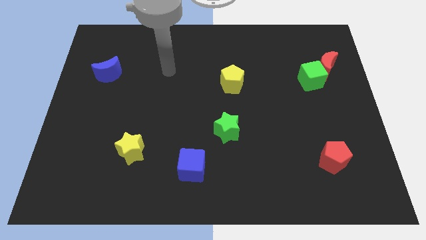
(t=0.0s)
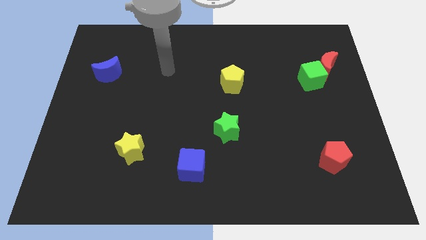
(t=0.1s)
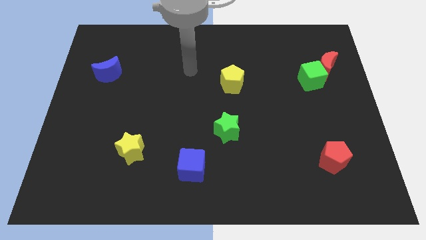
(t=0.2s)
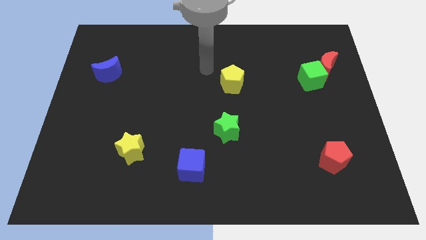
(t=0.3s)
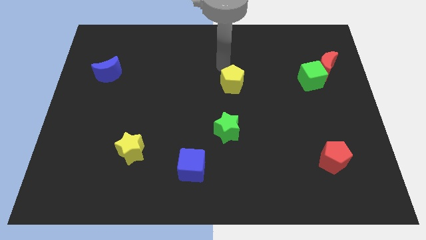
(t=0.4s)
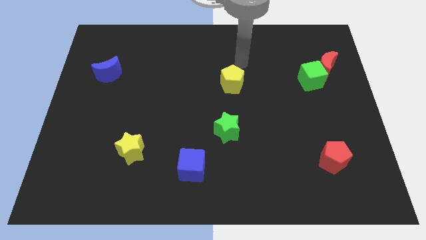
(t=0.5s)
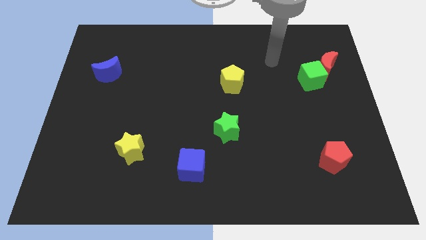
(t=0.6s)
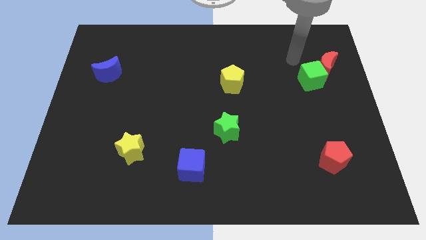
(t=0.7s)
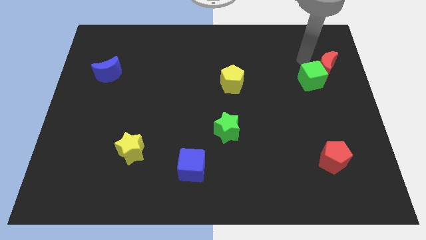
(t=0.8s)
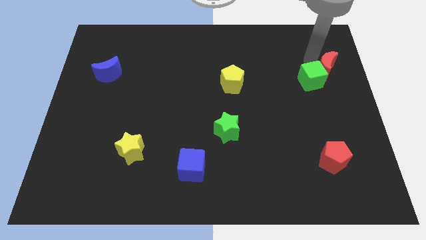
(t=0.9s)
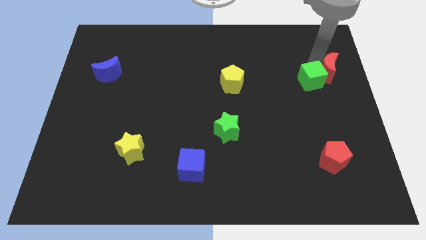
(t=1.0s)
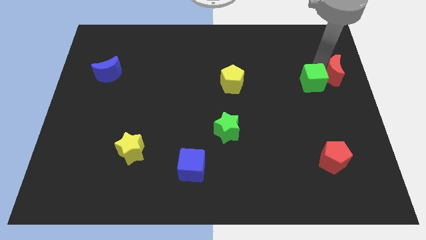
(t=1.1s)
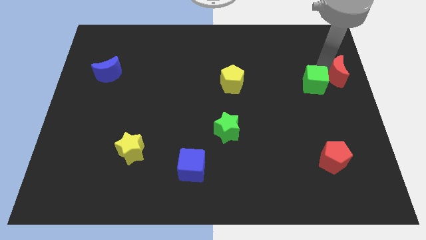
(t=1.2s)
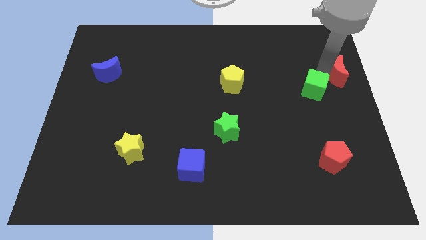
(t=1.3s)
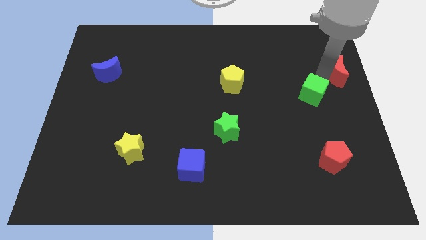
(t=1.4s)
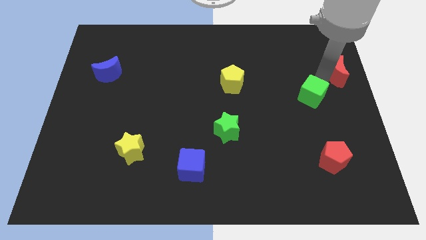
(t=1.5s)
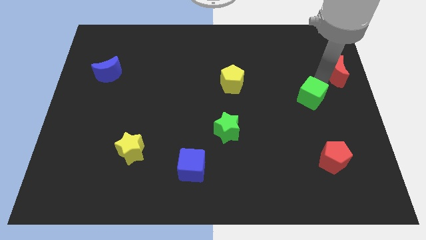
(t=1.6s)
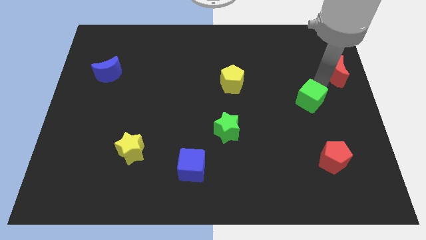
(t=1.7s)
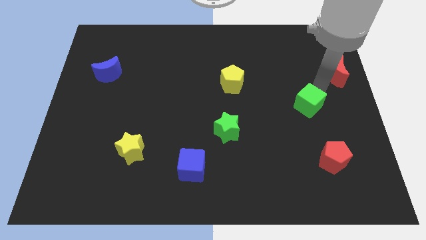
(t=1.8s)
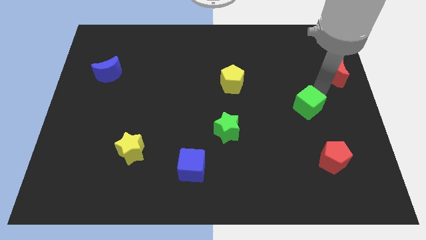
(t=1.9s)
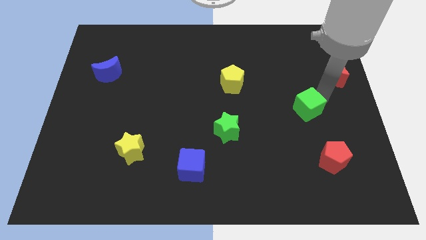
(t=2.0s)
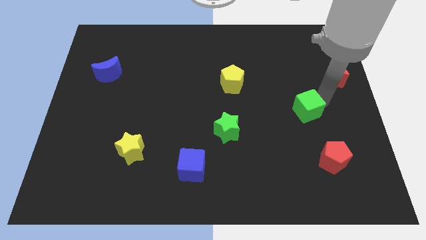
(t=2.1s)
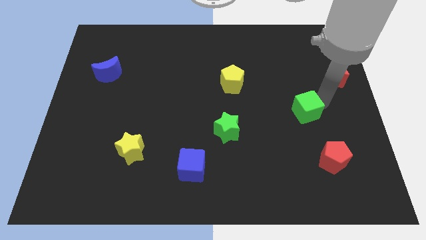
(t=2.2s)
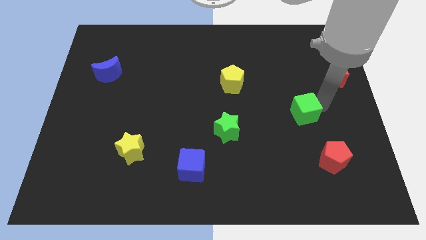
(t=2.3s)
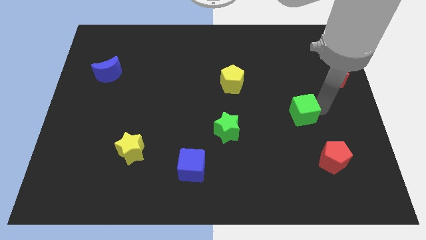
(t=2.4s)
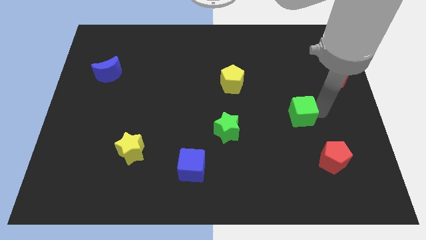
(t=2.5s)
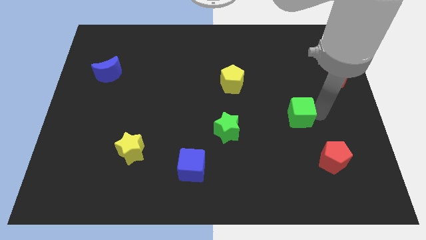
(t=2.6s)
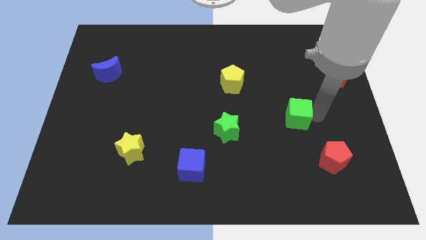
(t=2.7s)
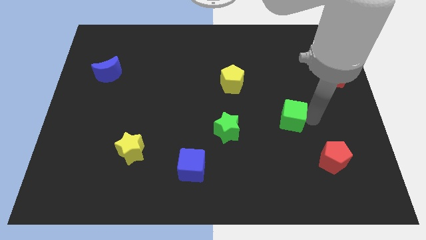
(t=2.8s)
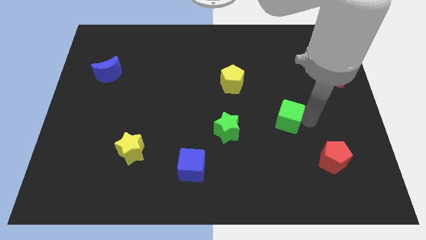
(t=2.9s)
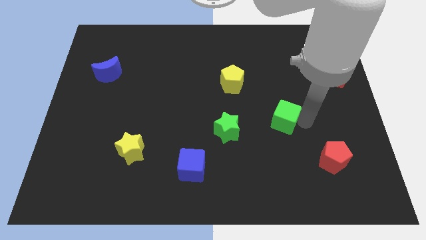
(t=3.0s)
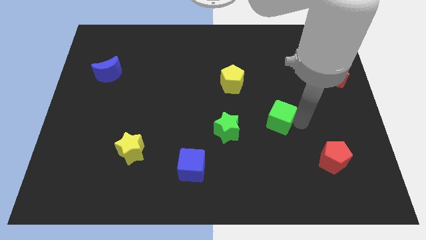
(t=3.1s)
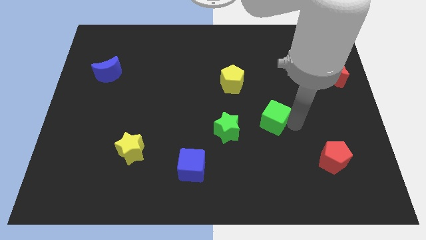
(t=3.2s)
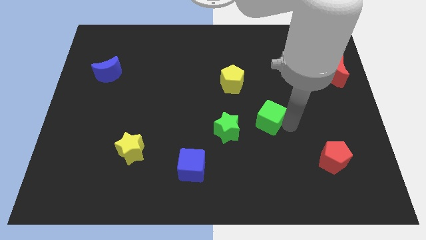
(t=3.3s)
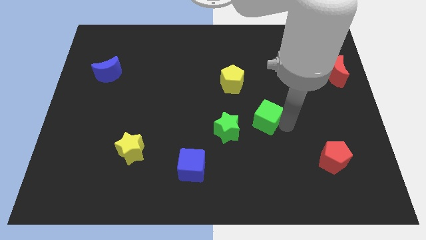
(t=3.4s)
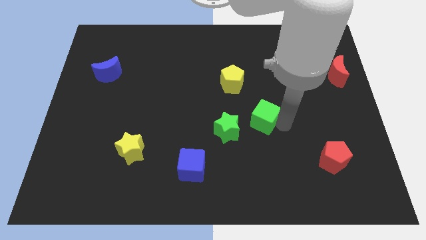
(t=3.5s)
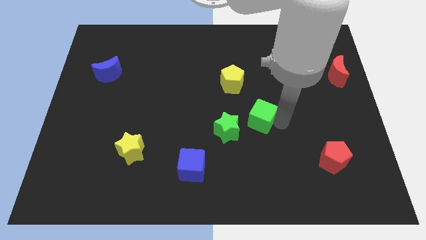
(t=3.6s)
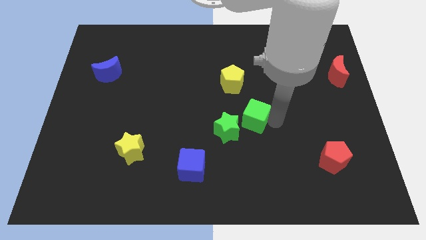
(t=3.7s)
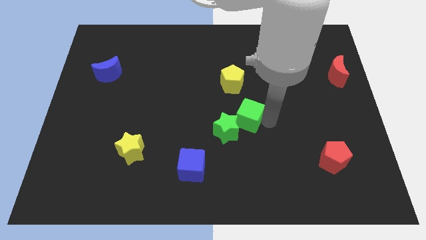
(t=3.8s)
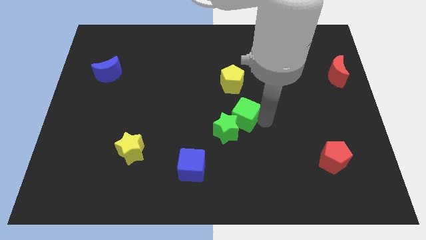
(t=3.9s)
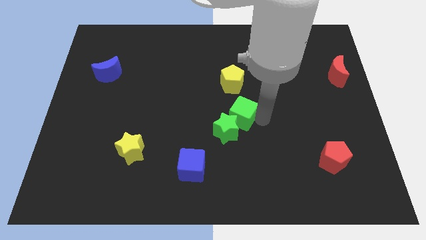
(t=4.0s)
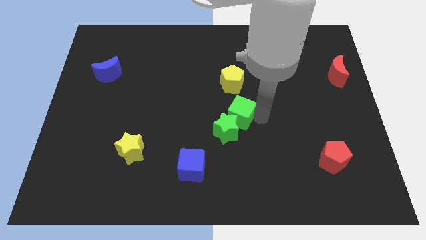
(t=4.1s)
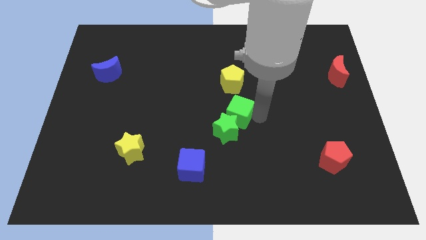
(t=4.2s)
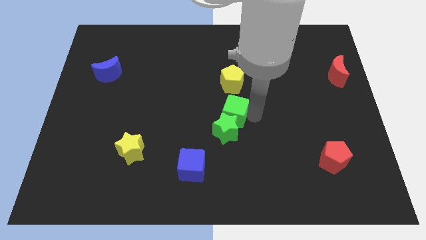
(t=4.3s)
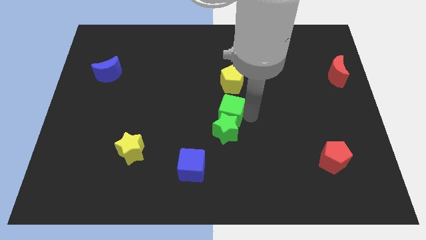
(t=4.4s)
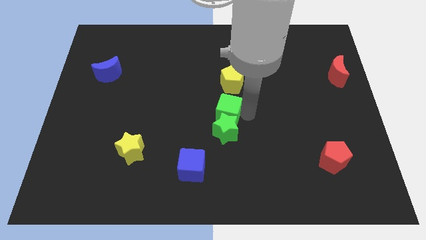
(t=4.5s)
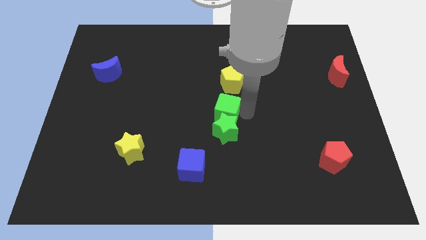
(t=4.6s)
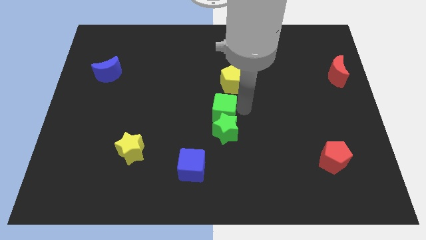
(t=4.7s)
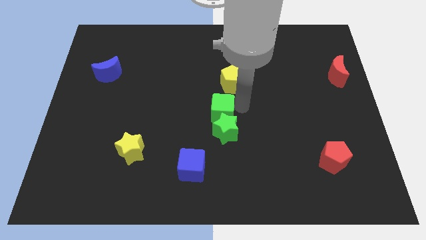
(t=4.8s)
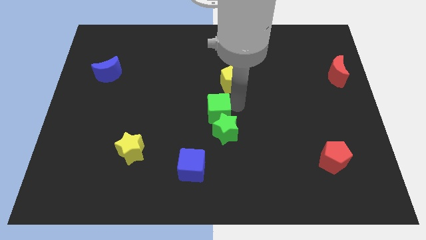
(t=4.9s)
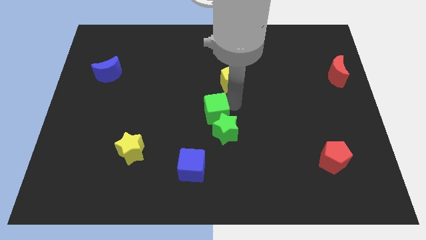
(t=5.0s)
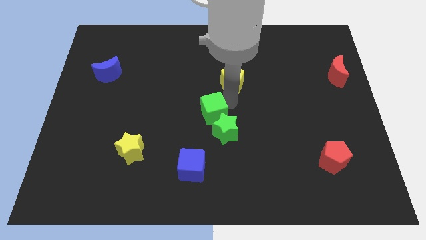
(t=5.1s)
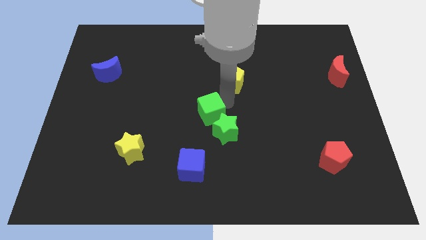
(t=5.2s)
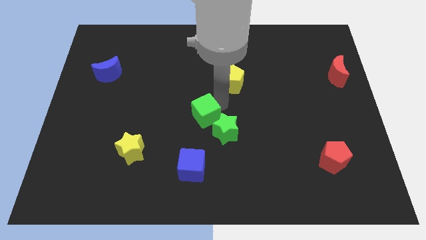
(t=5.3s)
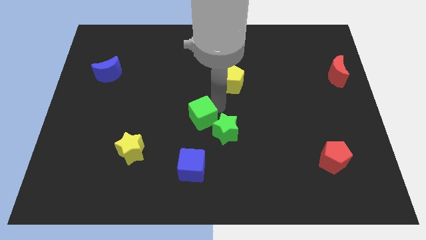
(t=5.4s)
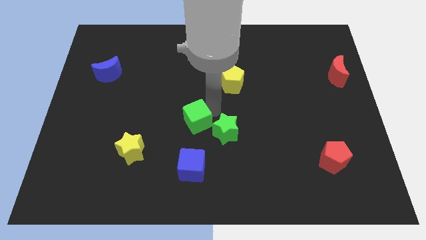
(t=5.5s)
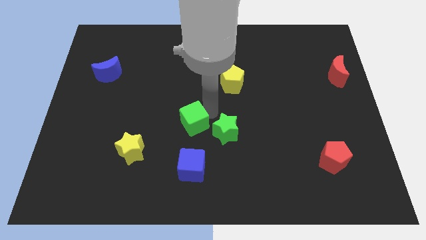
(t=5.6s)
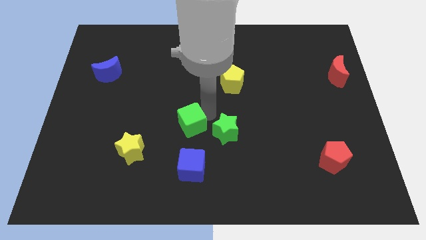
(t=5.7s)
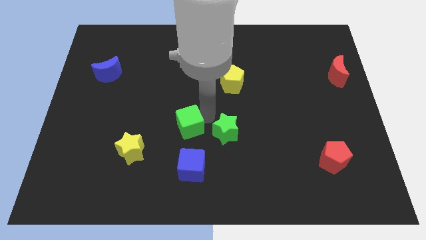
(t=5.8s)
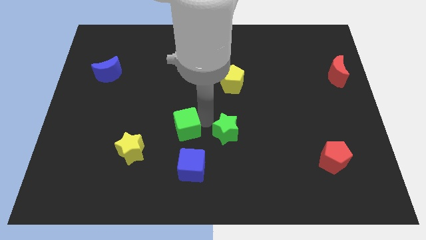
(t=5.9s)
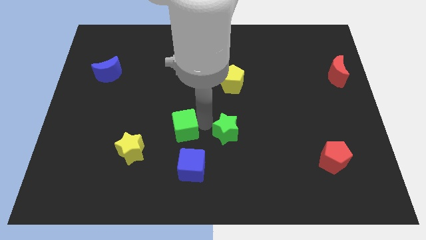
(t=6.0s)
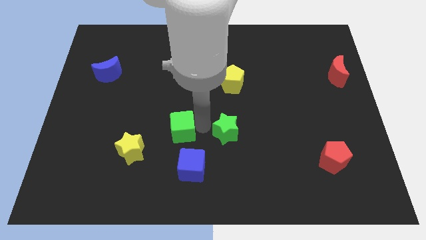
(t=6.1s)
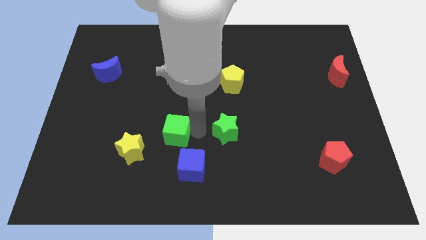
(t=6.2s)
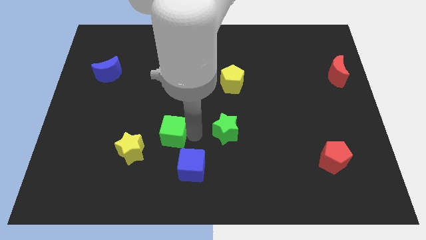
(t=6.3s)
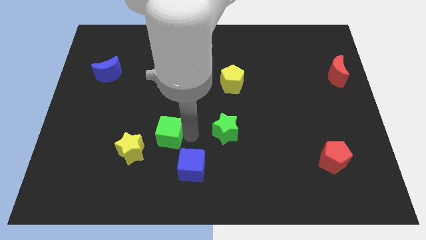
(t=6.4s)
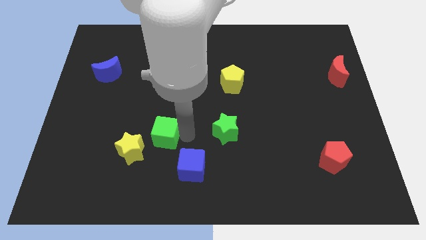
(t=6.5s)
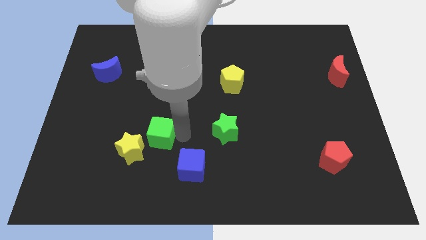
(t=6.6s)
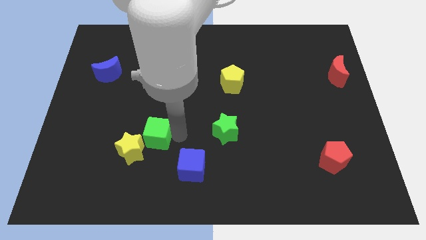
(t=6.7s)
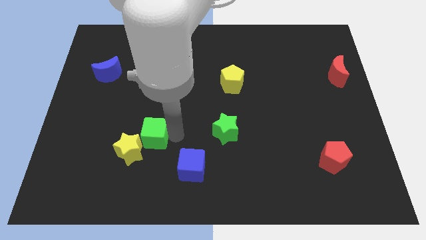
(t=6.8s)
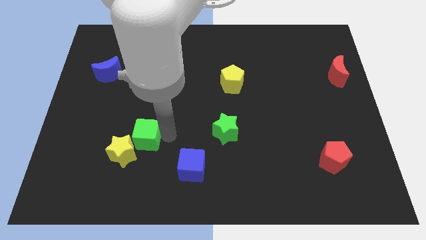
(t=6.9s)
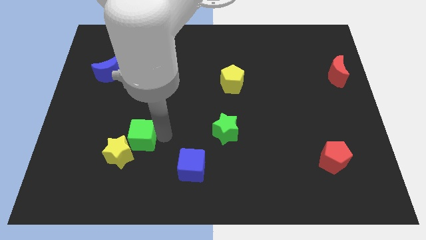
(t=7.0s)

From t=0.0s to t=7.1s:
slide the green cube next to the yellow star

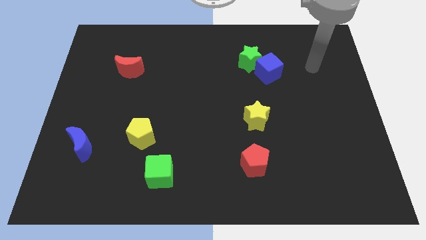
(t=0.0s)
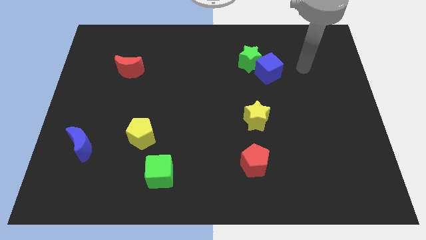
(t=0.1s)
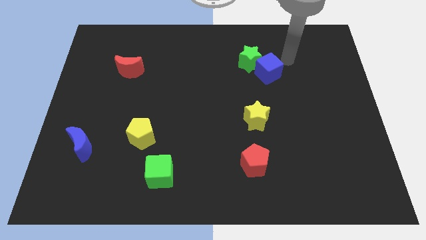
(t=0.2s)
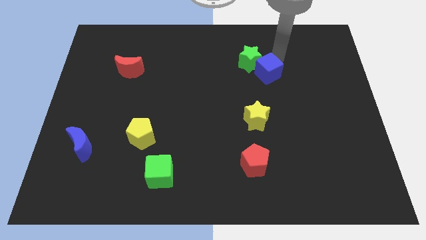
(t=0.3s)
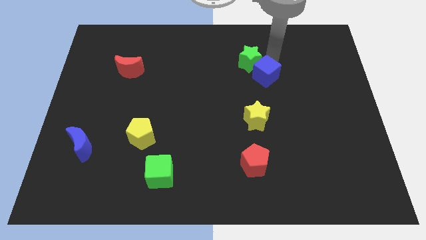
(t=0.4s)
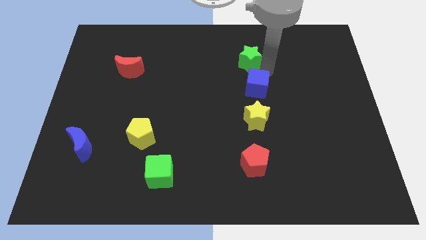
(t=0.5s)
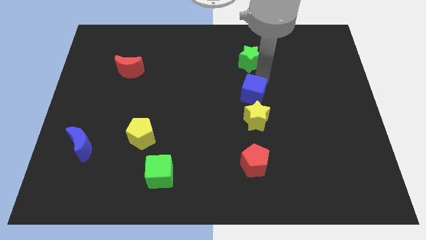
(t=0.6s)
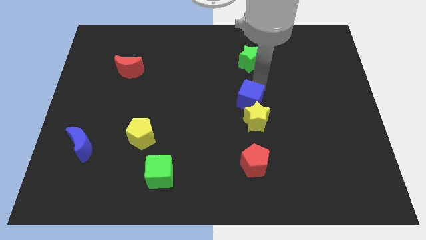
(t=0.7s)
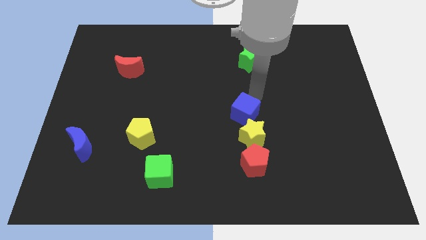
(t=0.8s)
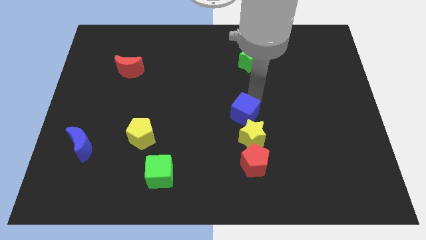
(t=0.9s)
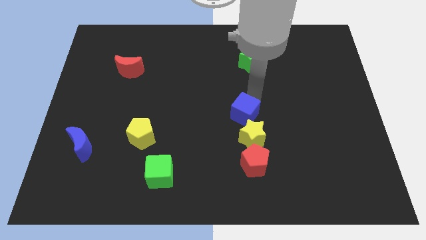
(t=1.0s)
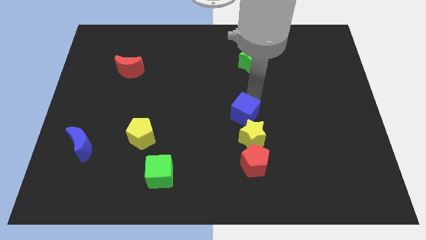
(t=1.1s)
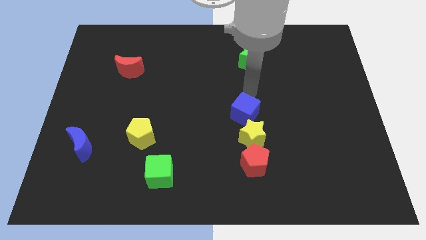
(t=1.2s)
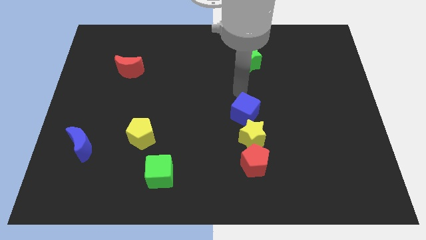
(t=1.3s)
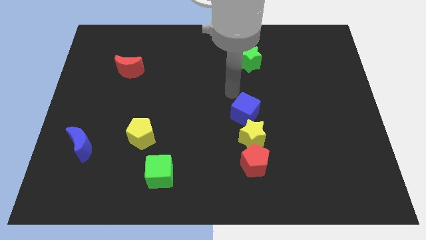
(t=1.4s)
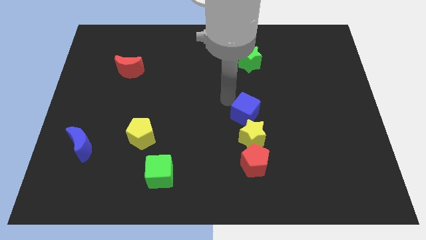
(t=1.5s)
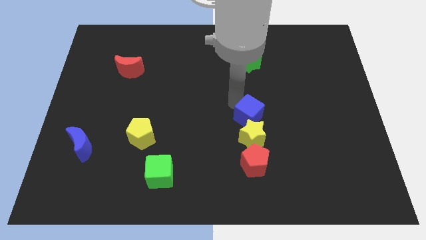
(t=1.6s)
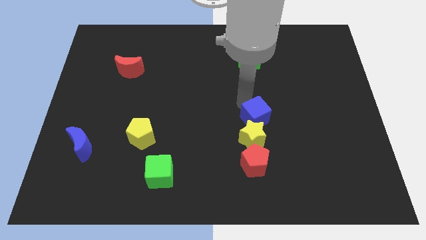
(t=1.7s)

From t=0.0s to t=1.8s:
put the blue cube close to the yellow star
